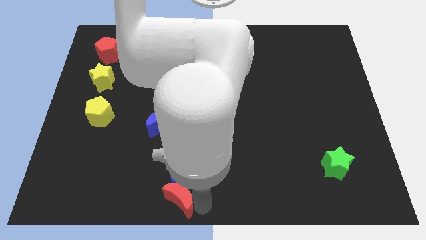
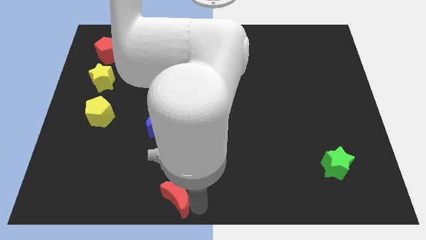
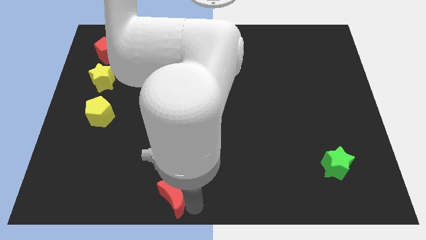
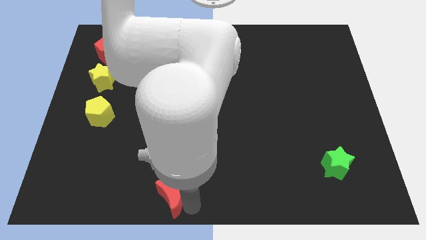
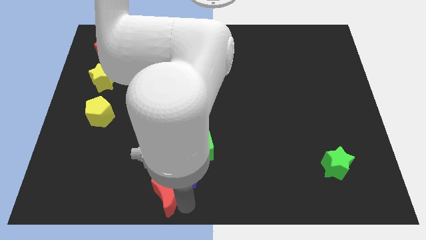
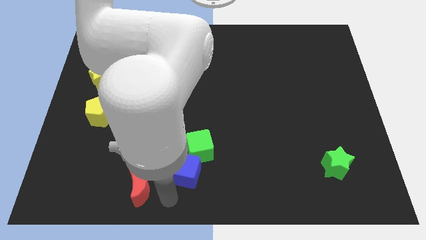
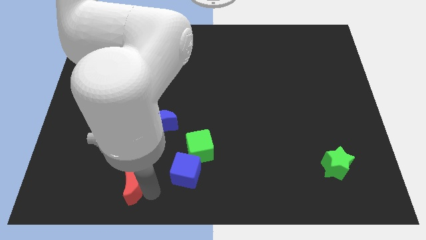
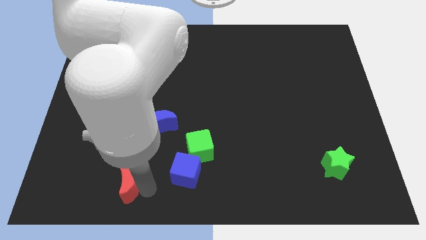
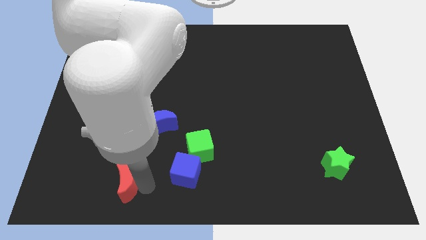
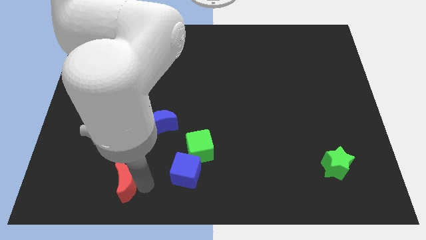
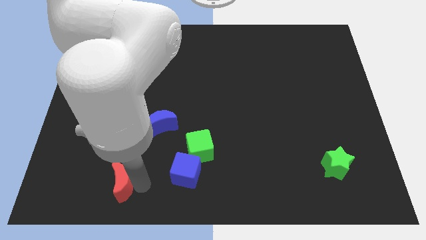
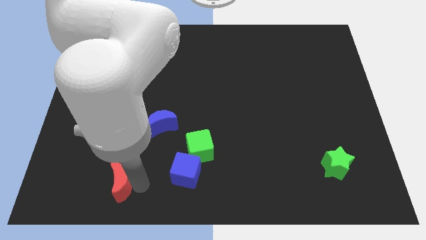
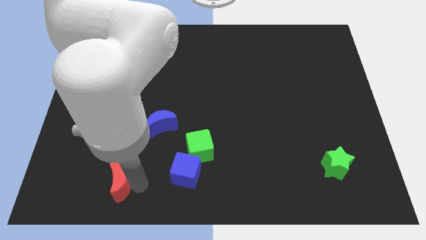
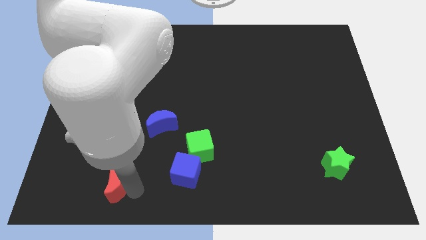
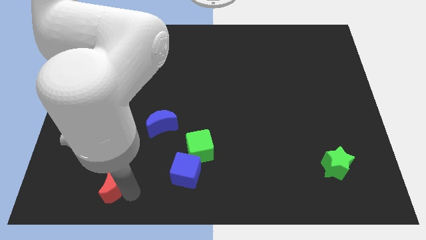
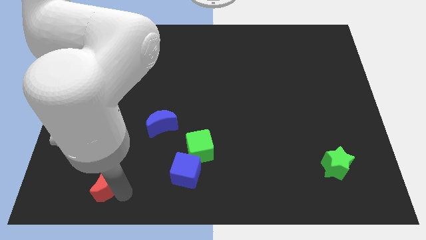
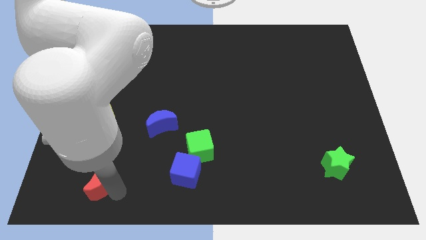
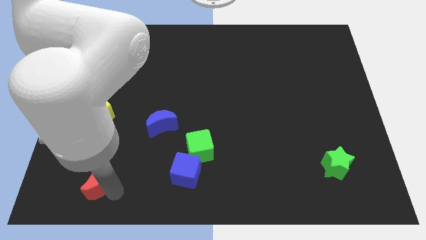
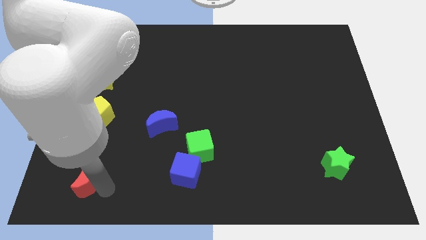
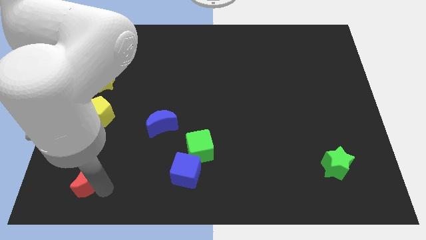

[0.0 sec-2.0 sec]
move the red moon diagonally to the blue moon

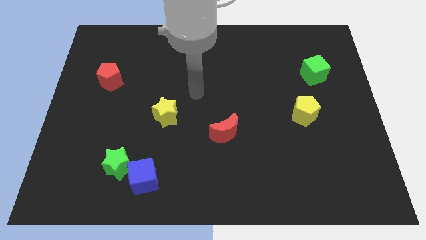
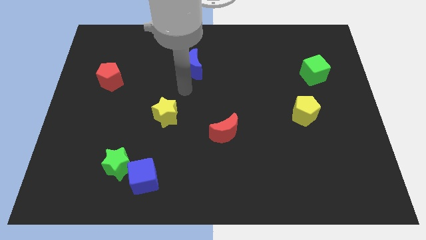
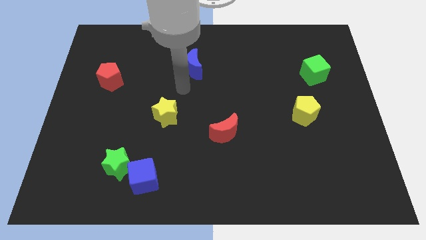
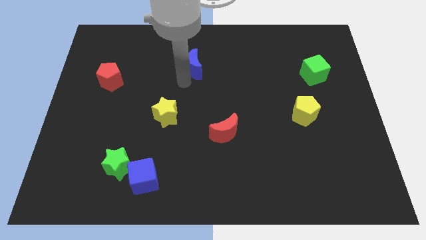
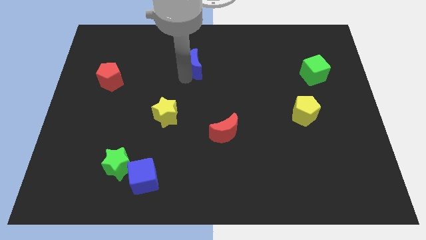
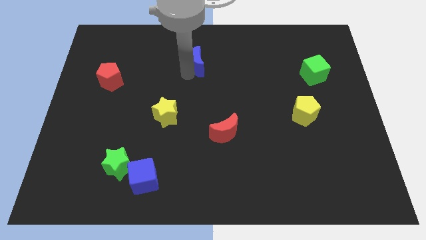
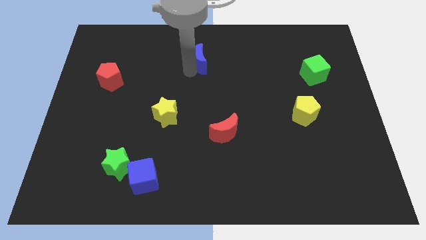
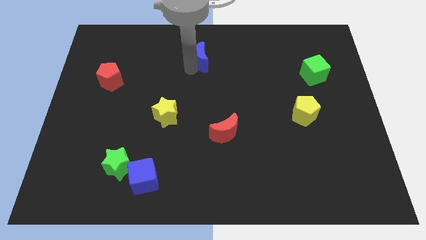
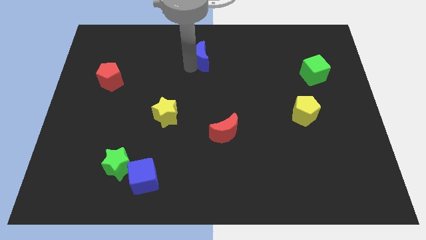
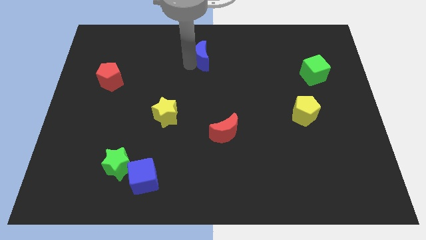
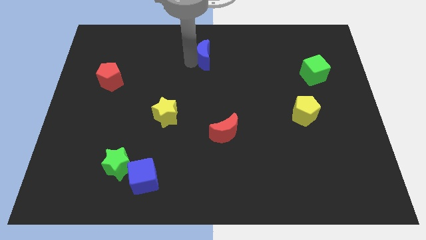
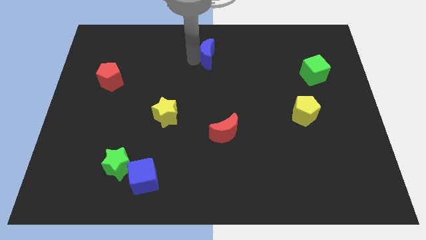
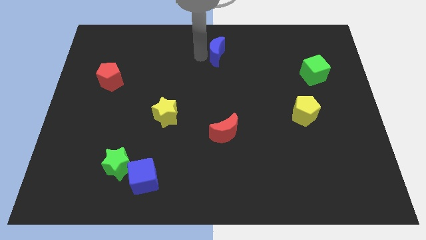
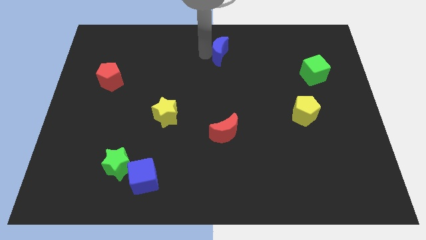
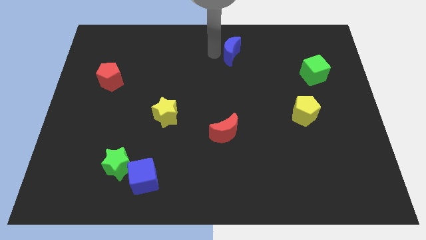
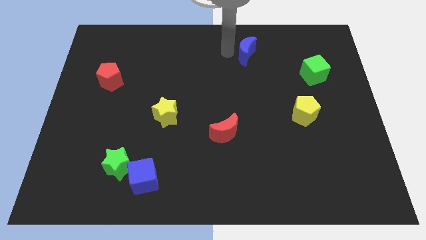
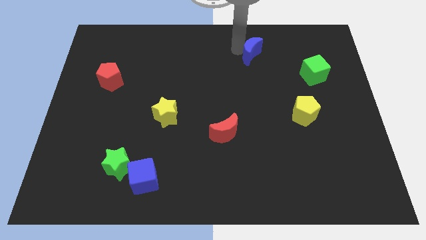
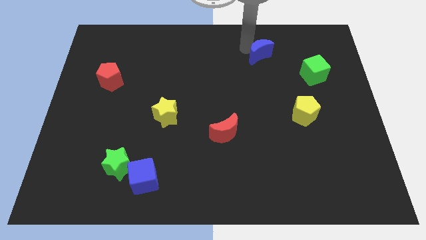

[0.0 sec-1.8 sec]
push the blue moon to the right side of the board

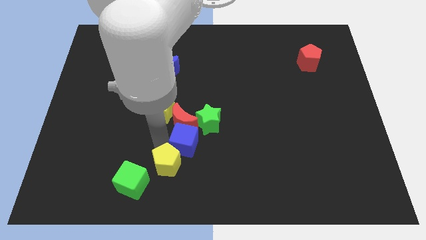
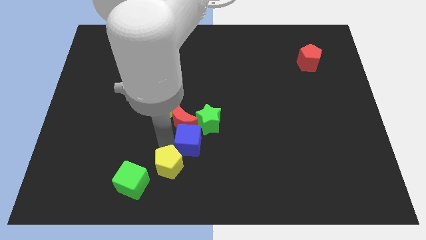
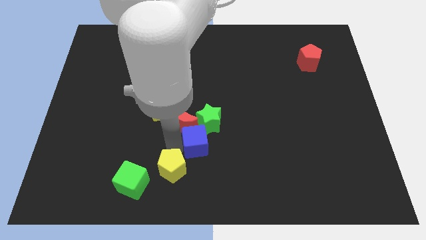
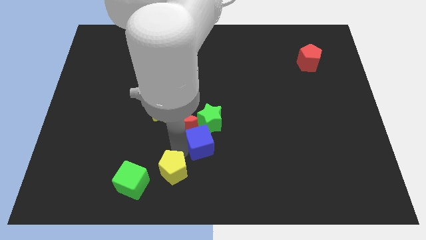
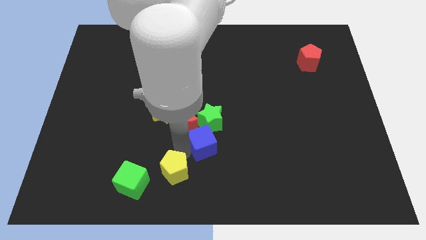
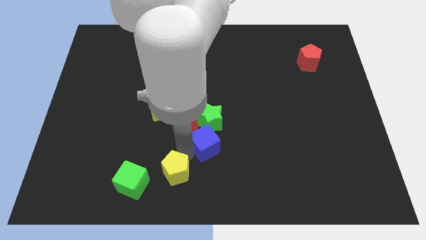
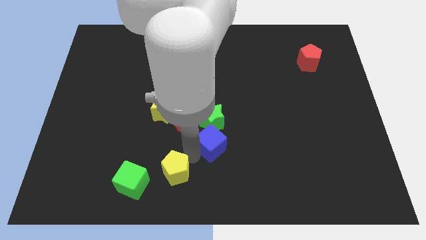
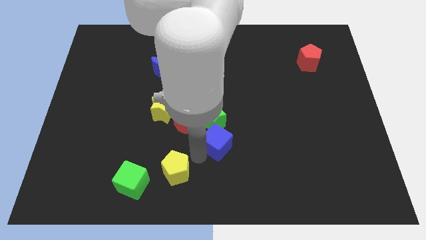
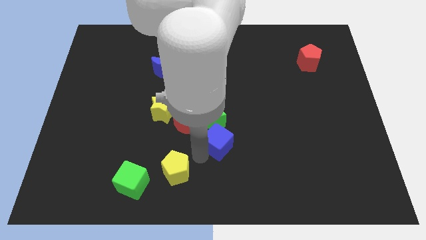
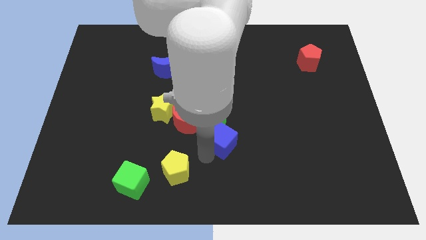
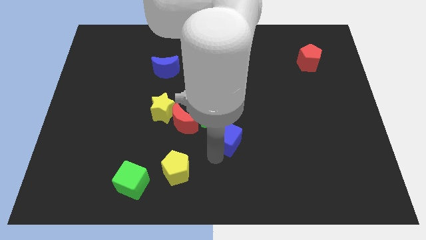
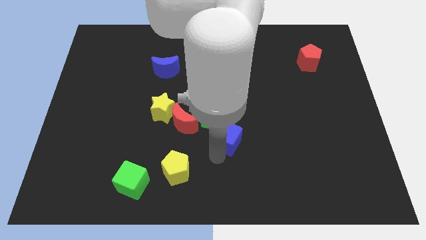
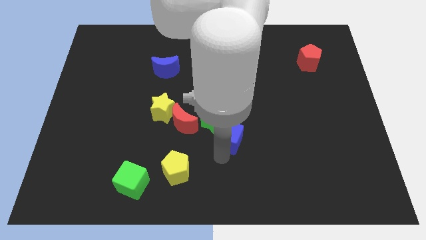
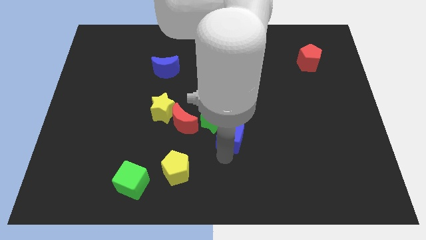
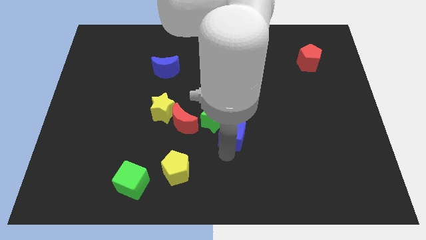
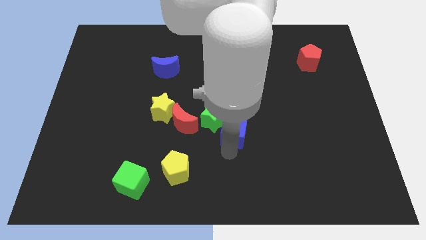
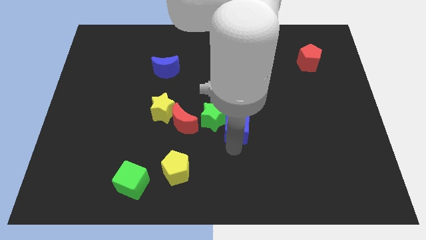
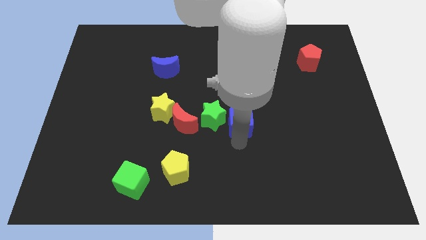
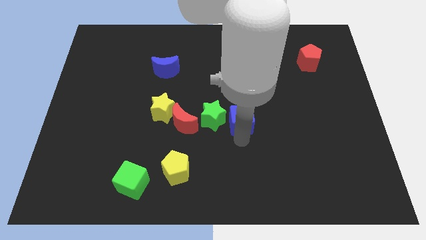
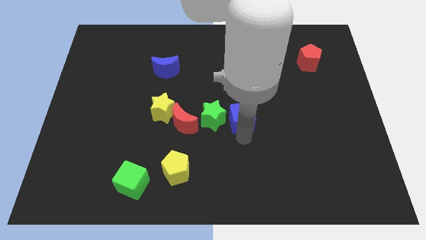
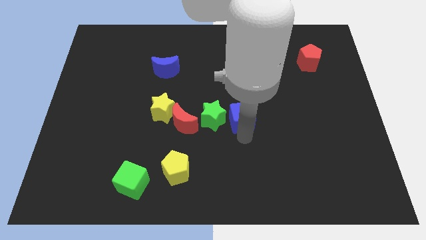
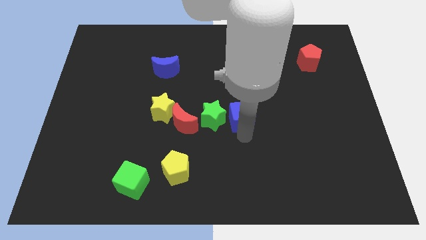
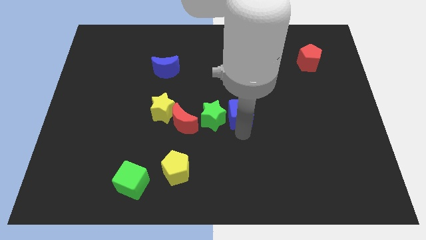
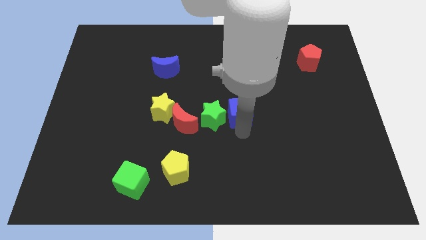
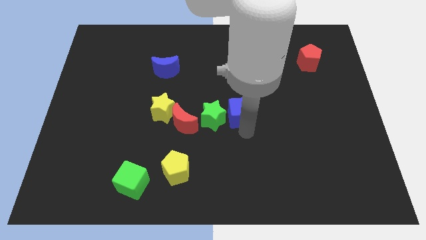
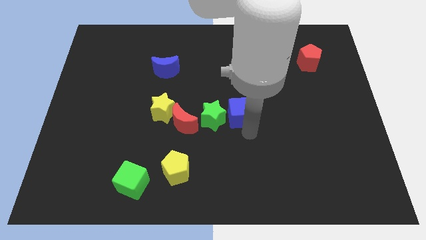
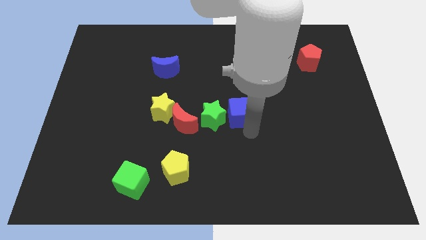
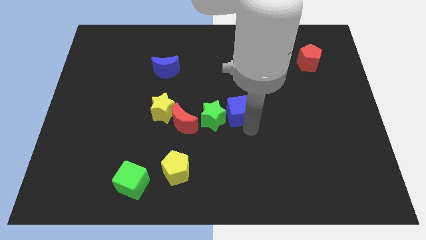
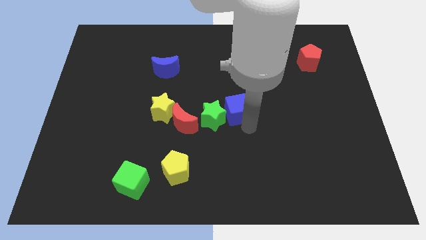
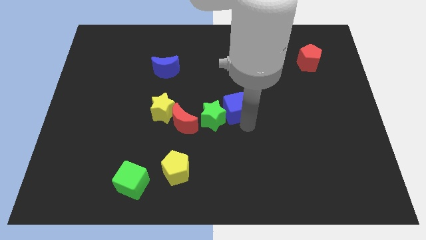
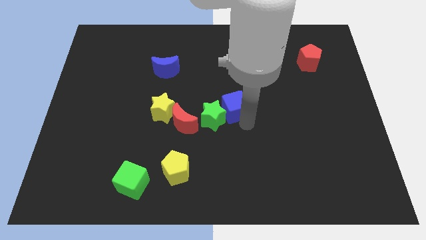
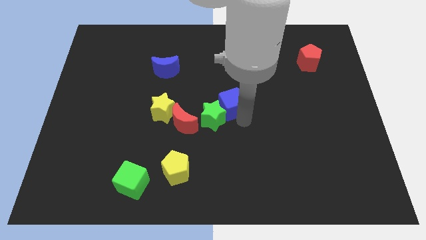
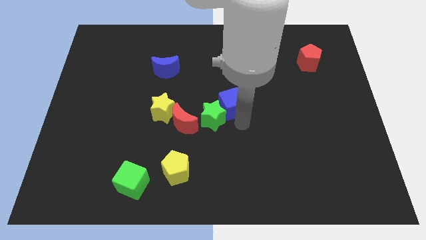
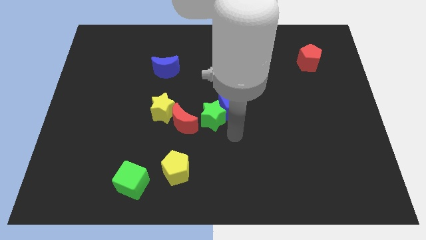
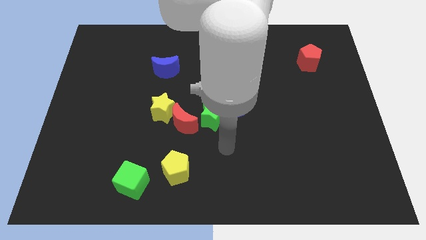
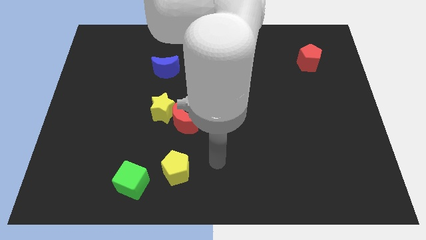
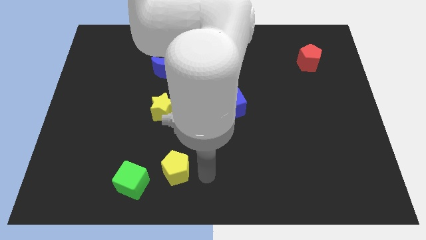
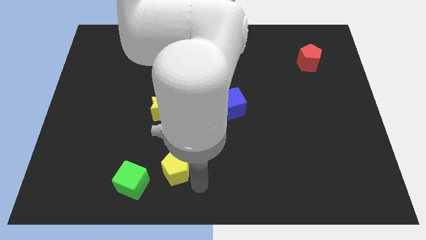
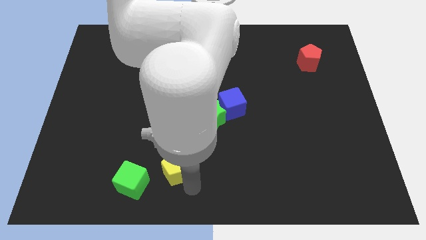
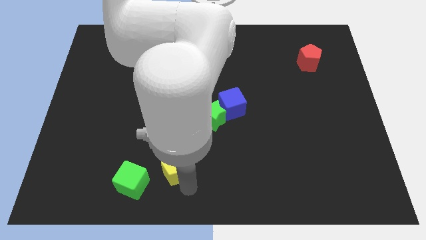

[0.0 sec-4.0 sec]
move the blue cube to the top right of green star

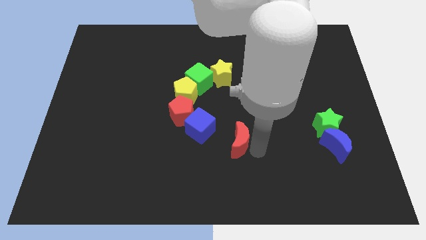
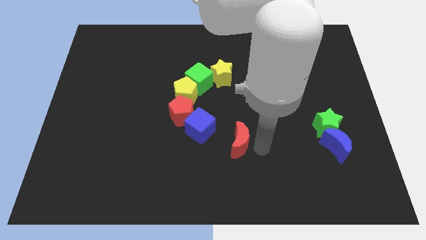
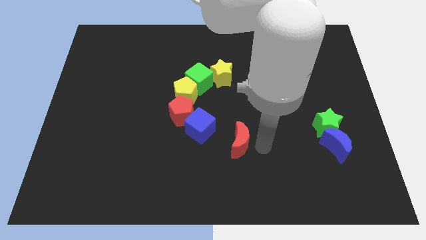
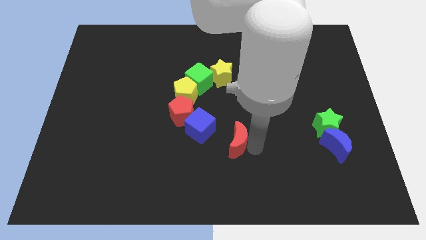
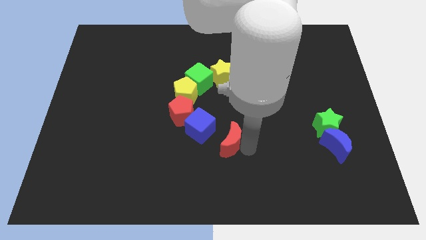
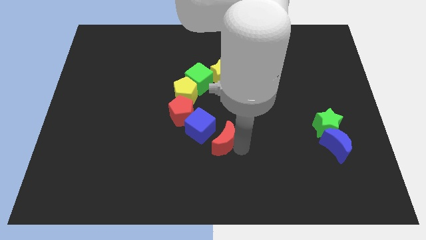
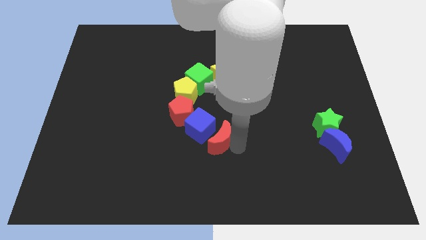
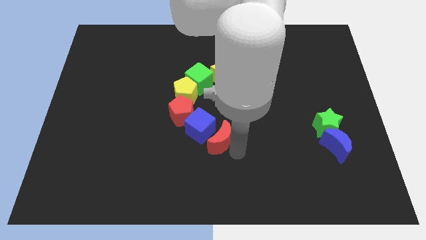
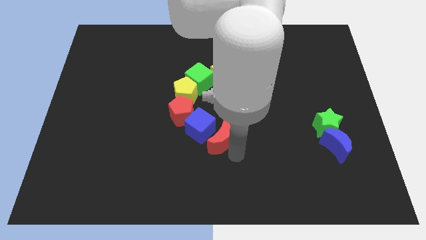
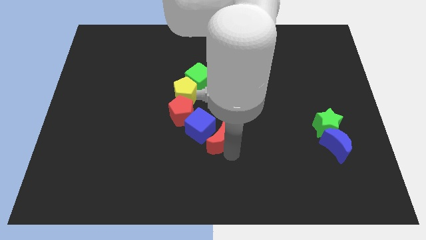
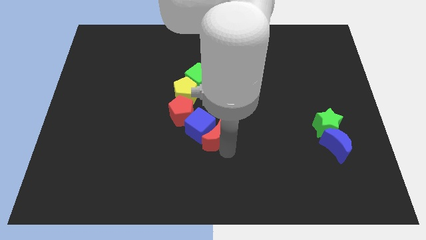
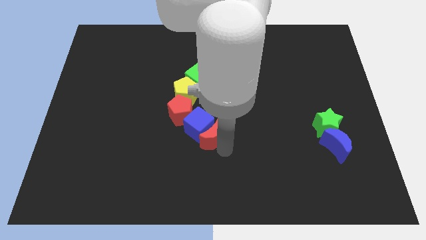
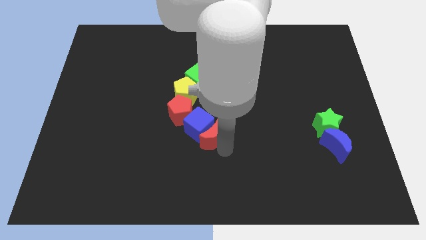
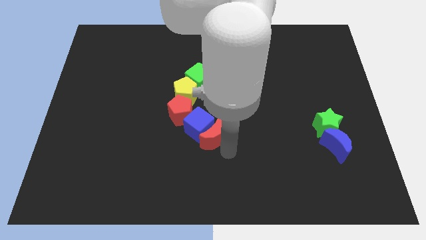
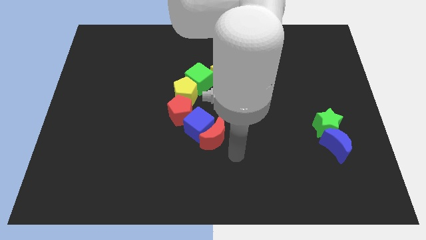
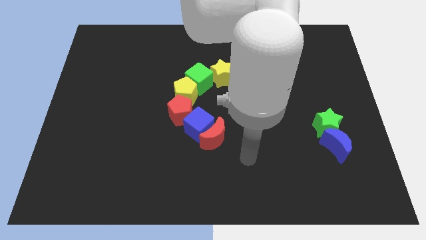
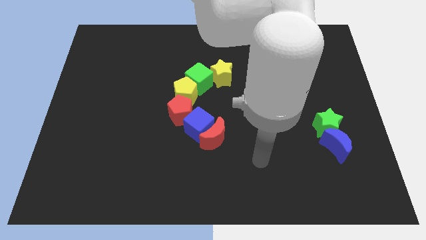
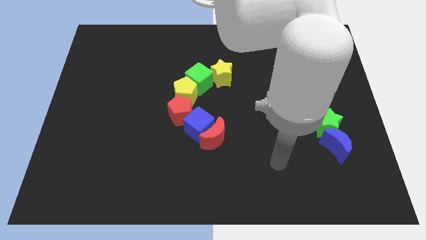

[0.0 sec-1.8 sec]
place the red moon into the blue cube
